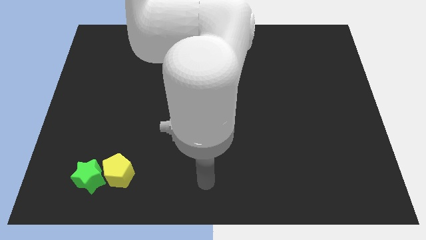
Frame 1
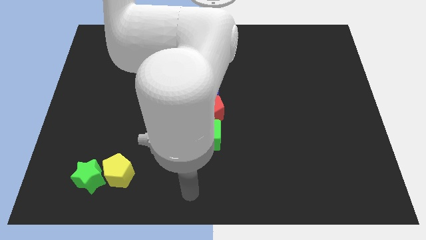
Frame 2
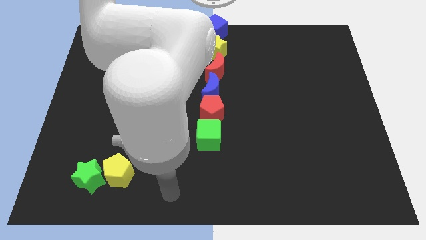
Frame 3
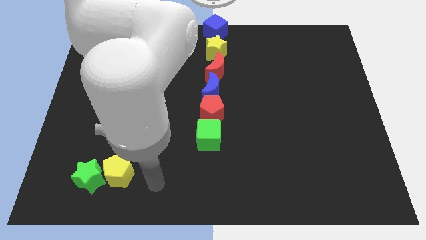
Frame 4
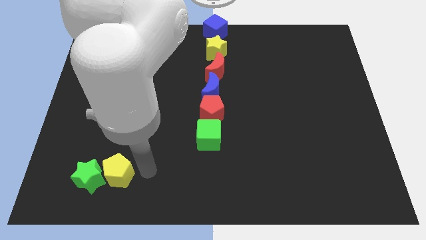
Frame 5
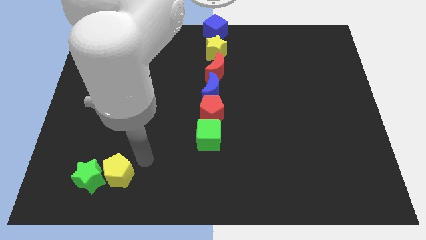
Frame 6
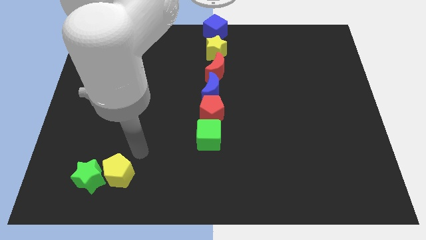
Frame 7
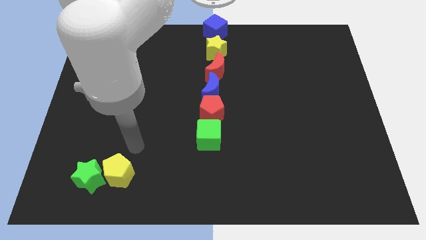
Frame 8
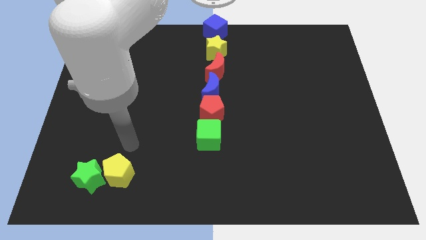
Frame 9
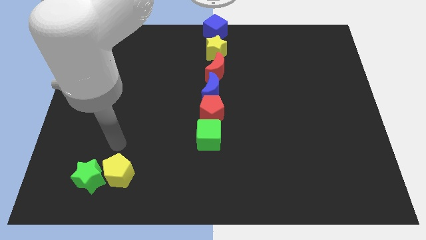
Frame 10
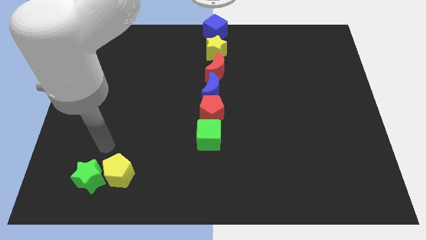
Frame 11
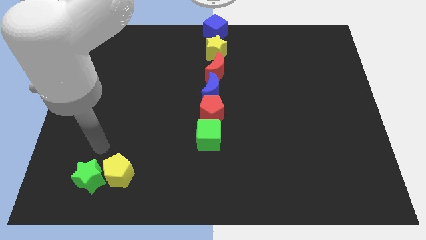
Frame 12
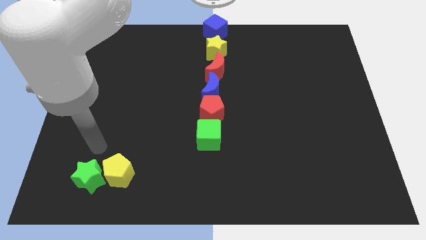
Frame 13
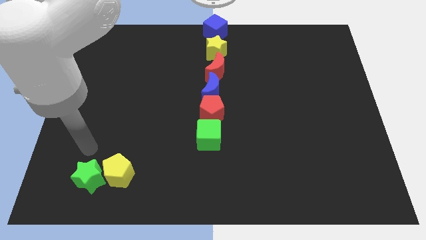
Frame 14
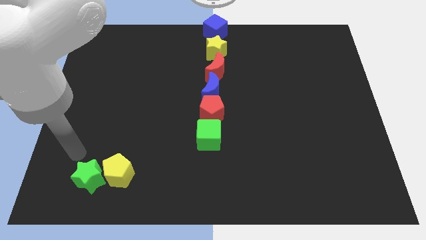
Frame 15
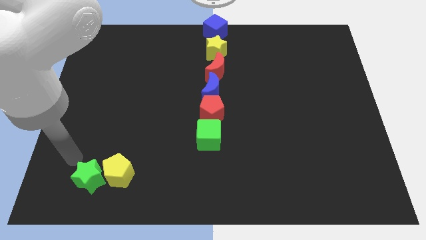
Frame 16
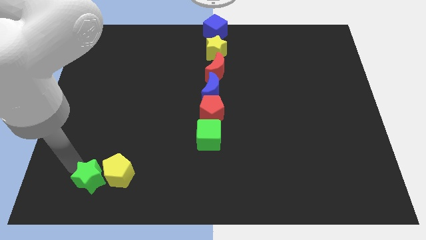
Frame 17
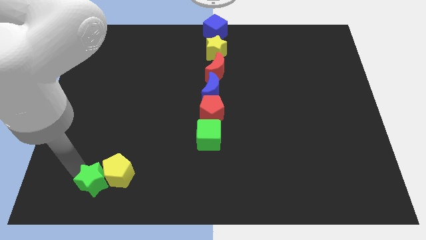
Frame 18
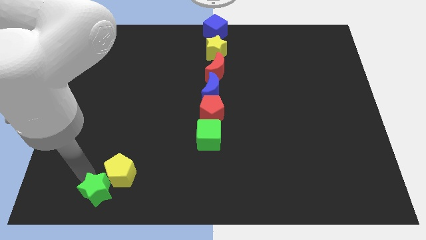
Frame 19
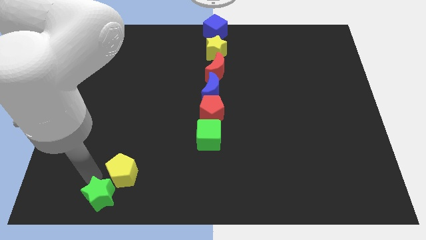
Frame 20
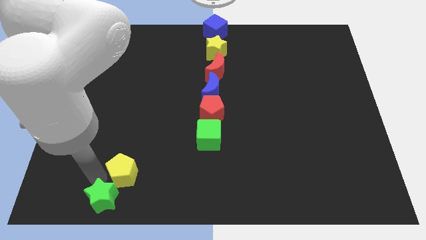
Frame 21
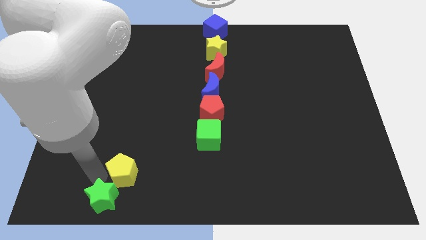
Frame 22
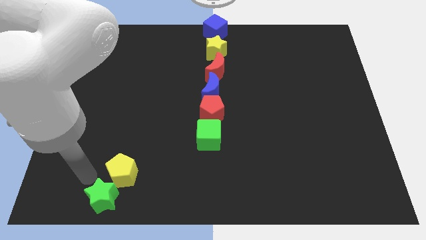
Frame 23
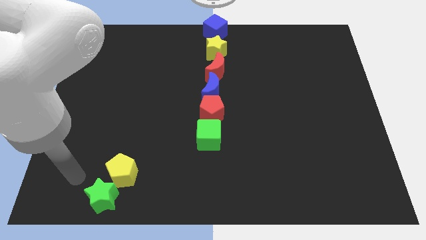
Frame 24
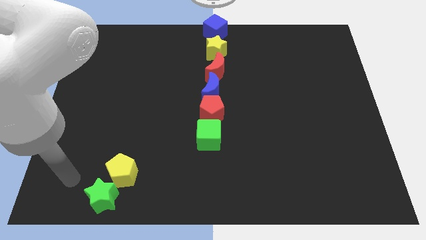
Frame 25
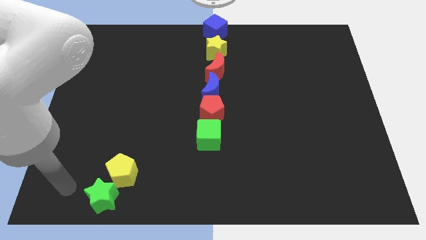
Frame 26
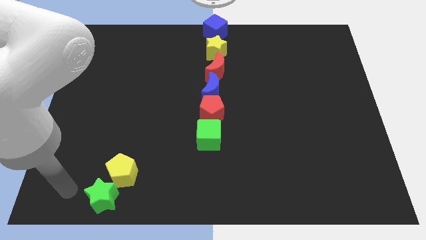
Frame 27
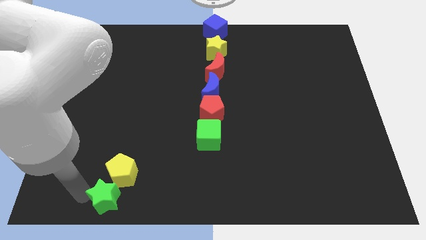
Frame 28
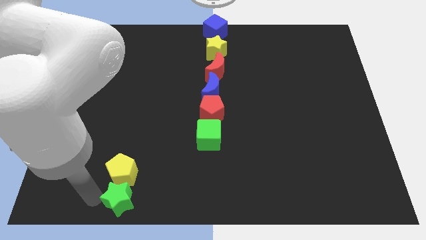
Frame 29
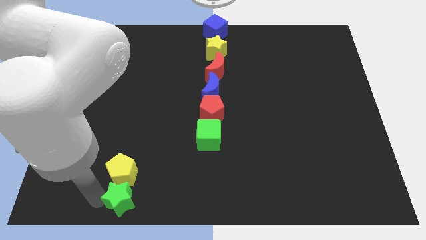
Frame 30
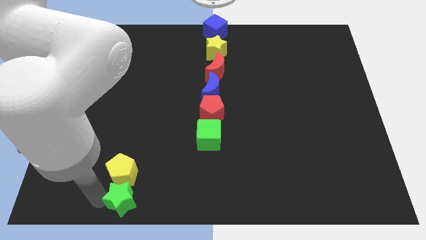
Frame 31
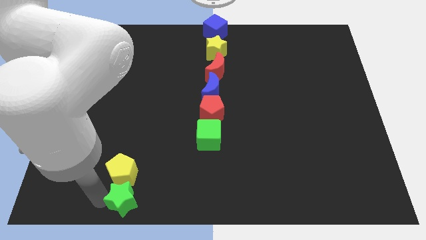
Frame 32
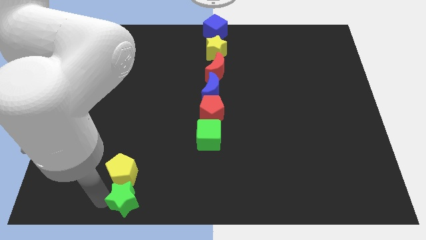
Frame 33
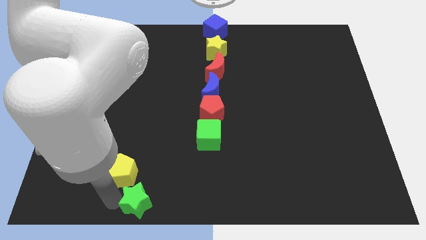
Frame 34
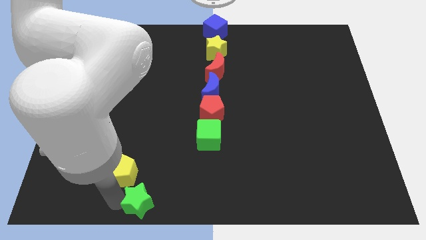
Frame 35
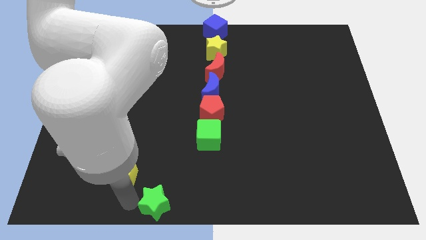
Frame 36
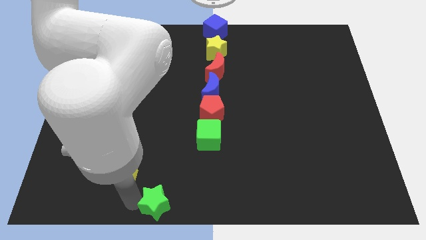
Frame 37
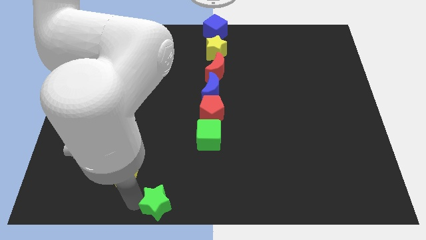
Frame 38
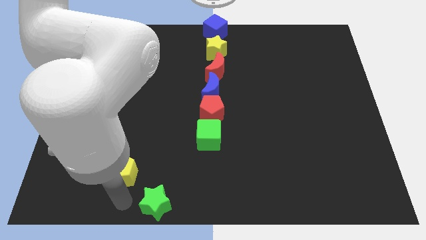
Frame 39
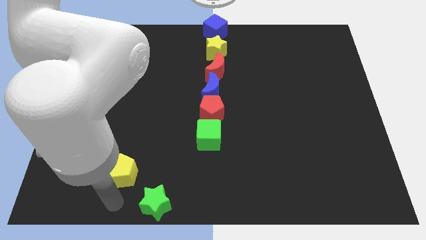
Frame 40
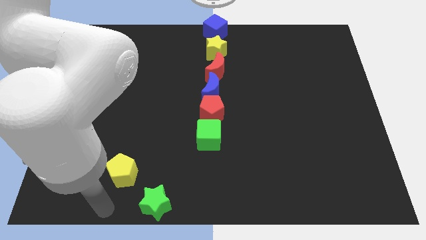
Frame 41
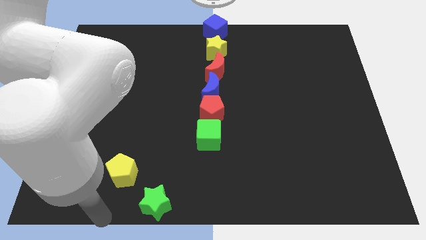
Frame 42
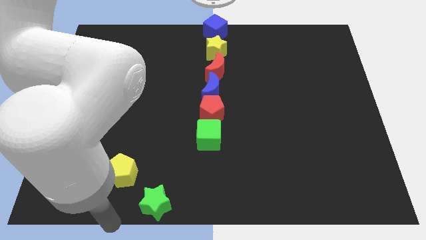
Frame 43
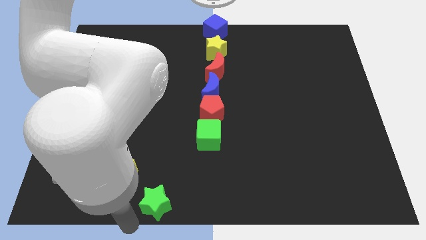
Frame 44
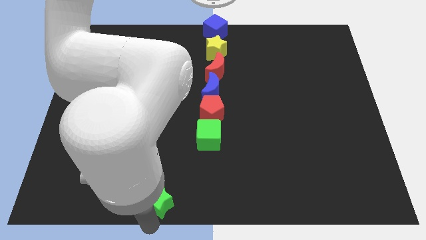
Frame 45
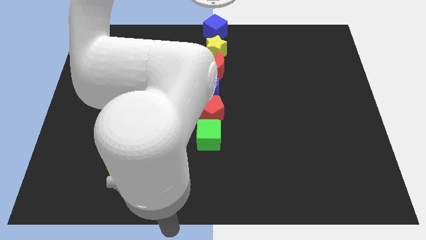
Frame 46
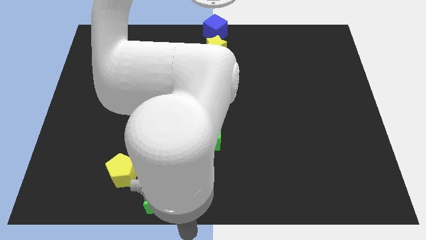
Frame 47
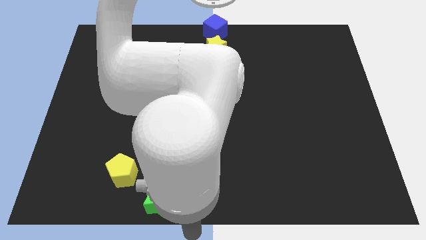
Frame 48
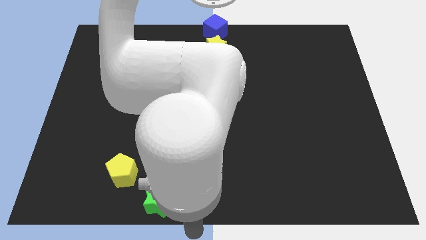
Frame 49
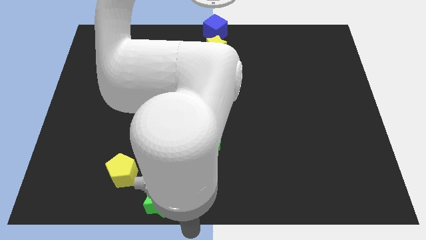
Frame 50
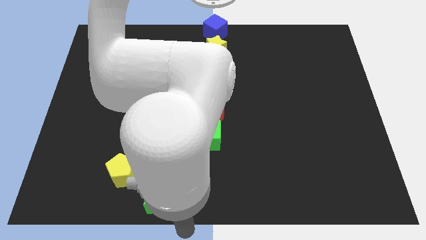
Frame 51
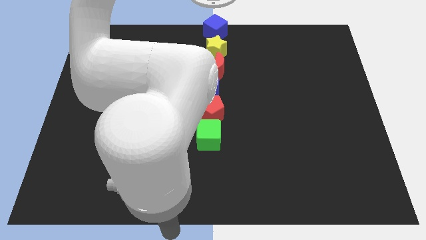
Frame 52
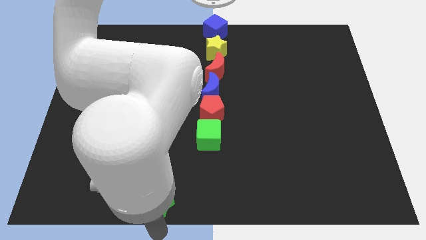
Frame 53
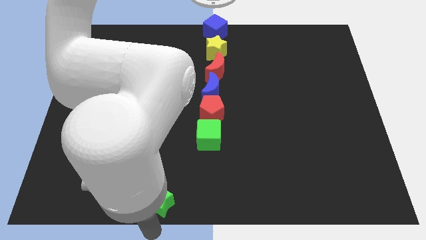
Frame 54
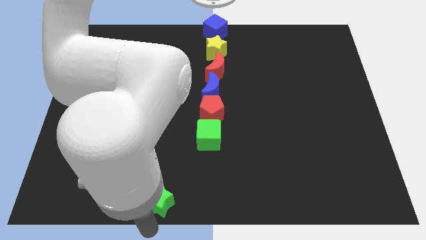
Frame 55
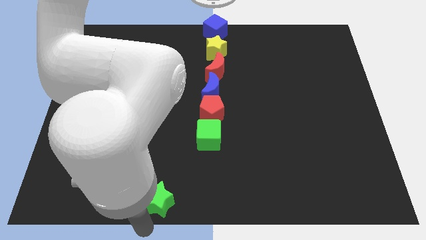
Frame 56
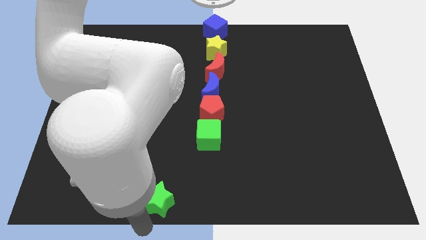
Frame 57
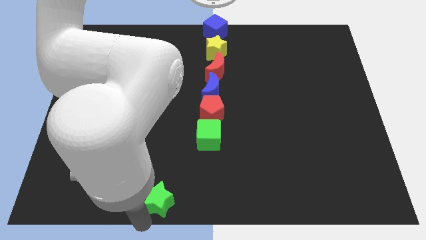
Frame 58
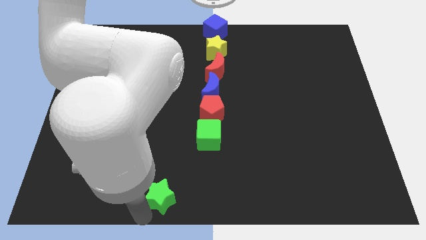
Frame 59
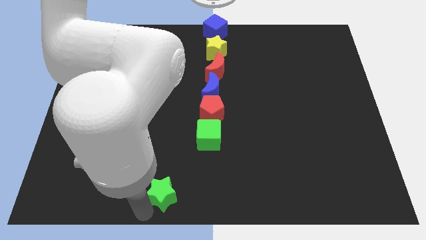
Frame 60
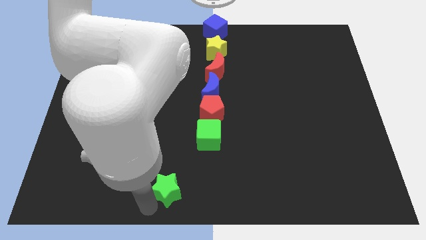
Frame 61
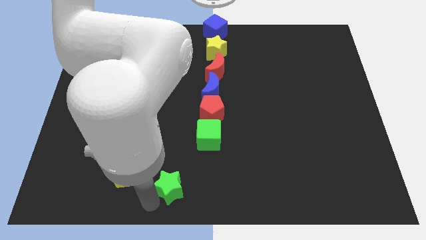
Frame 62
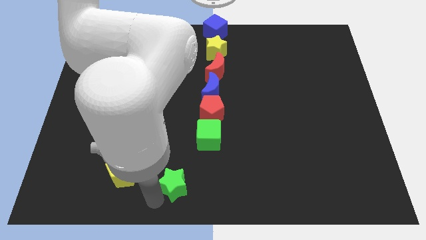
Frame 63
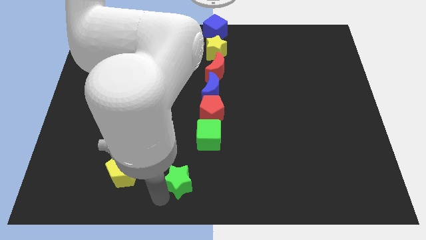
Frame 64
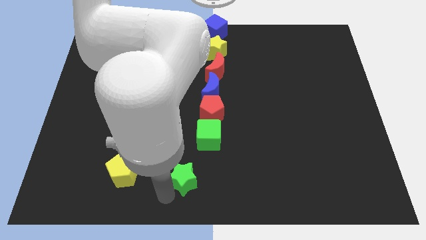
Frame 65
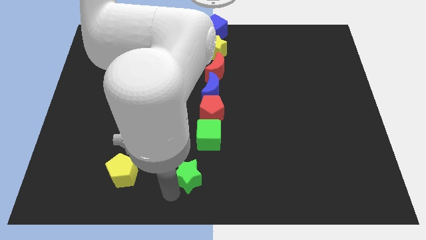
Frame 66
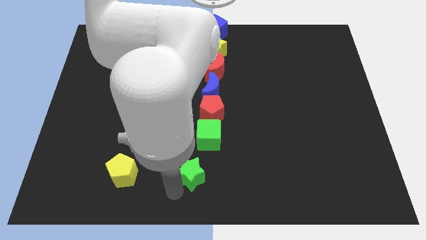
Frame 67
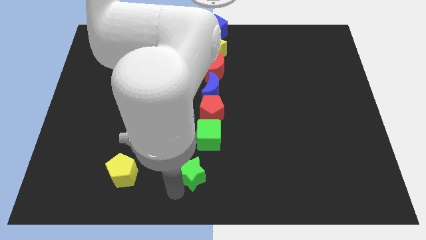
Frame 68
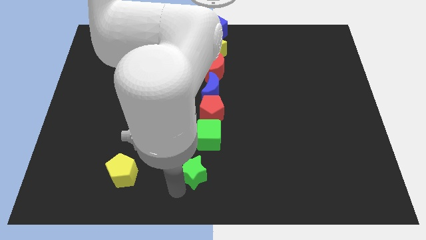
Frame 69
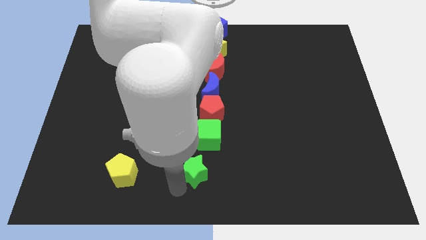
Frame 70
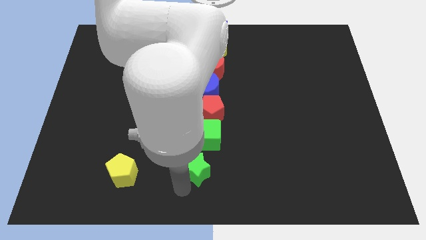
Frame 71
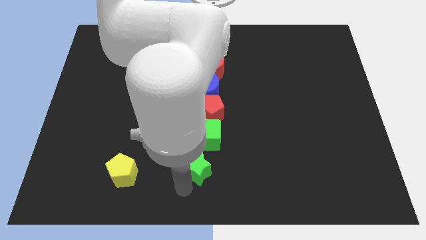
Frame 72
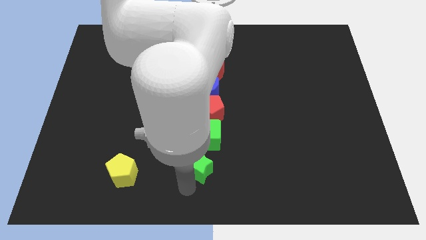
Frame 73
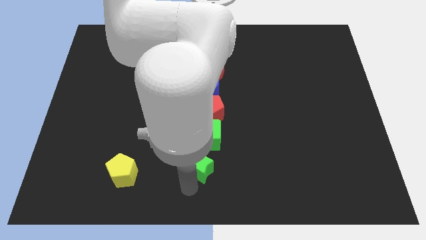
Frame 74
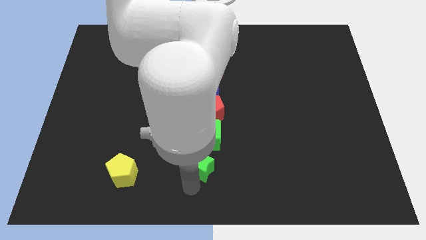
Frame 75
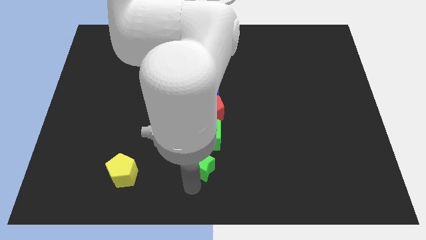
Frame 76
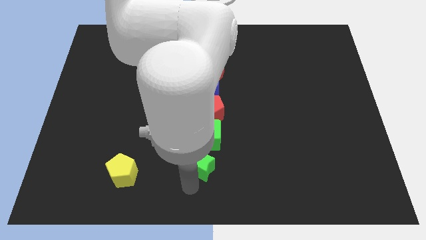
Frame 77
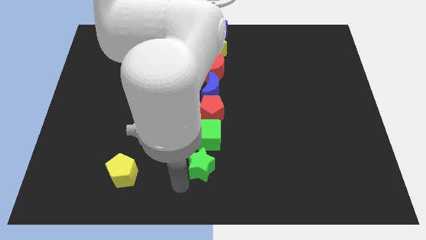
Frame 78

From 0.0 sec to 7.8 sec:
push the green star to the bottom of the green cube

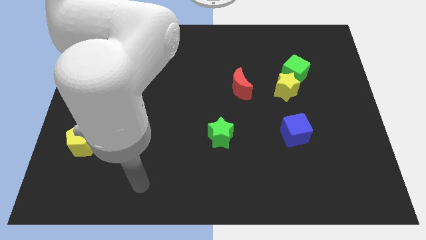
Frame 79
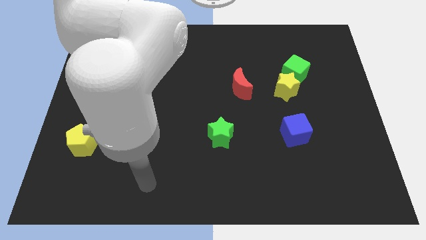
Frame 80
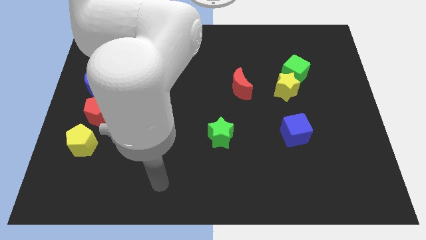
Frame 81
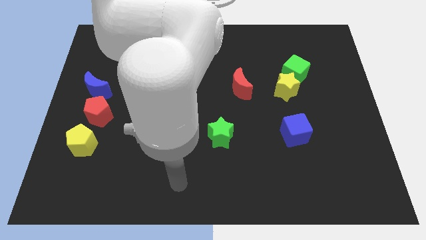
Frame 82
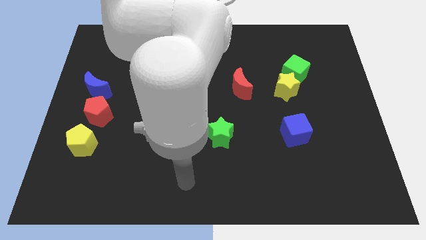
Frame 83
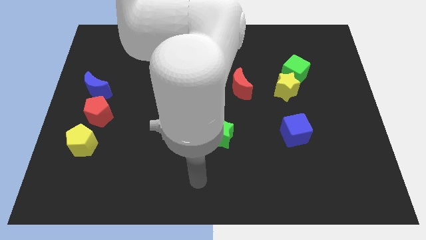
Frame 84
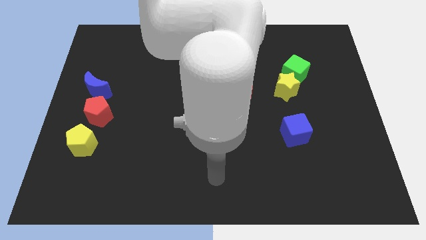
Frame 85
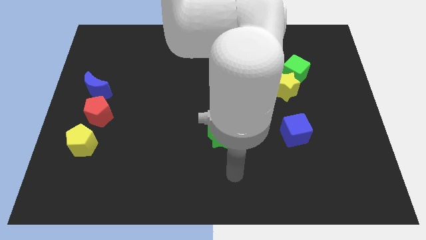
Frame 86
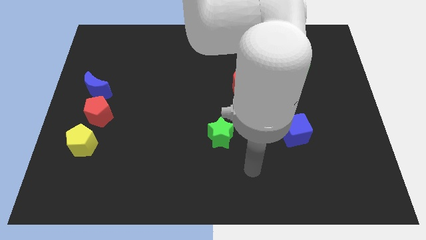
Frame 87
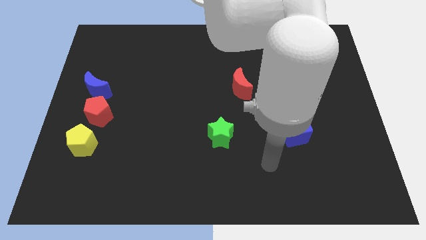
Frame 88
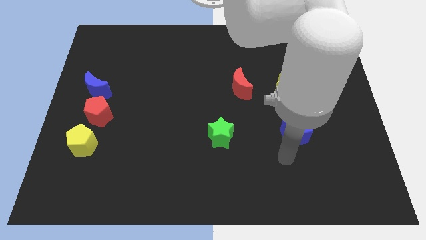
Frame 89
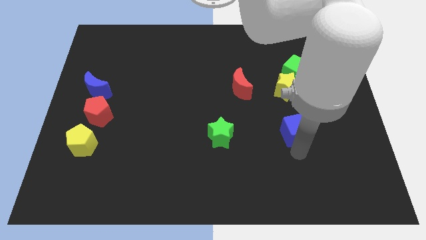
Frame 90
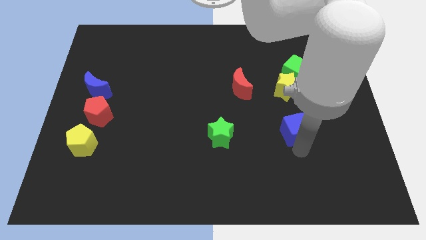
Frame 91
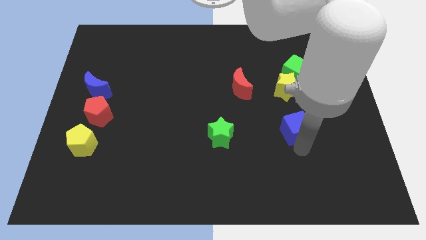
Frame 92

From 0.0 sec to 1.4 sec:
move your arm to the bottom of the blue cube
